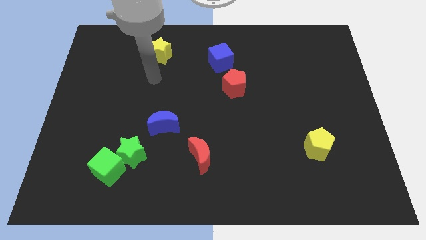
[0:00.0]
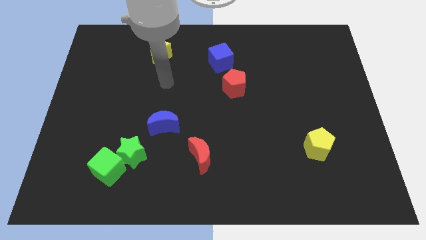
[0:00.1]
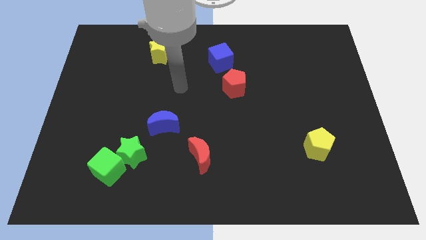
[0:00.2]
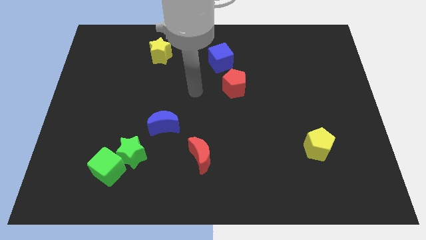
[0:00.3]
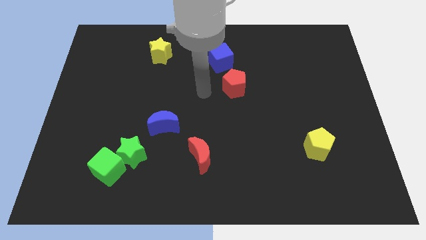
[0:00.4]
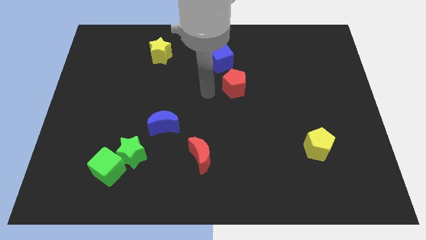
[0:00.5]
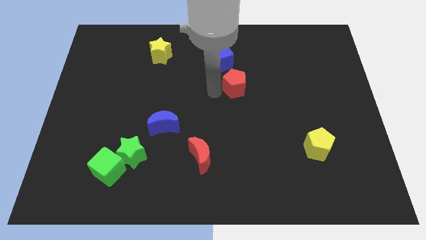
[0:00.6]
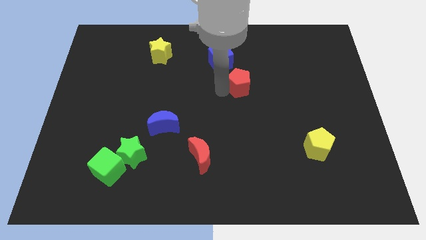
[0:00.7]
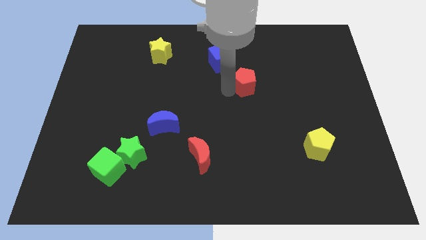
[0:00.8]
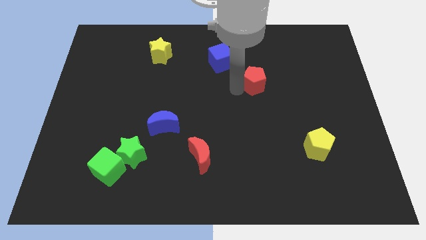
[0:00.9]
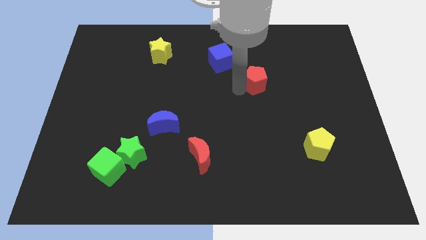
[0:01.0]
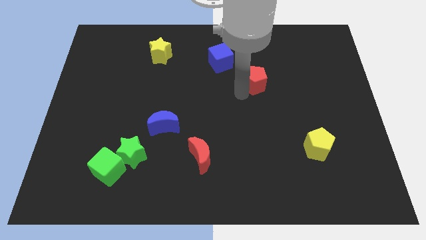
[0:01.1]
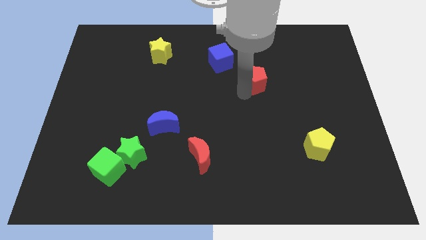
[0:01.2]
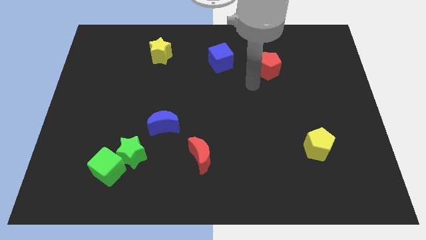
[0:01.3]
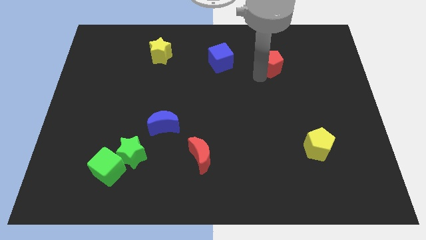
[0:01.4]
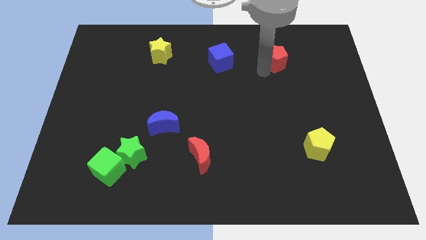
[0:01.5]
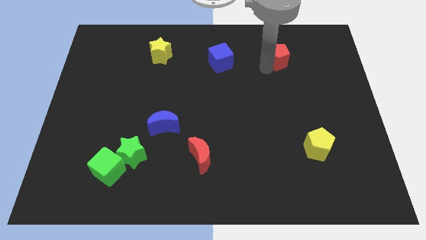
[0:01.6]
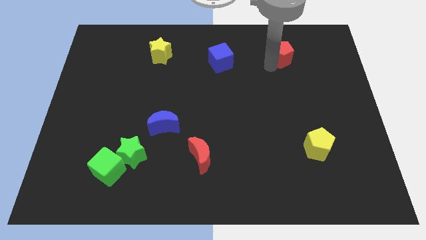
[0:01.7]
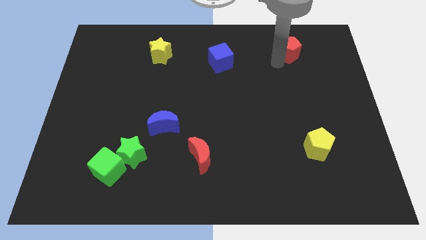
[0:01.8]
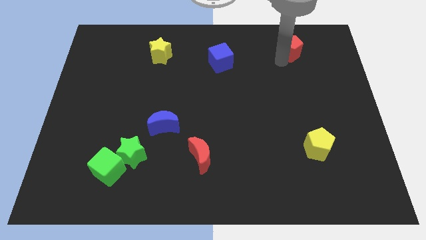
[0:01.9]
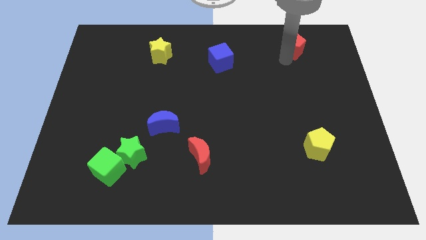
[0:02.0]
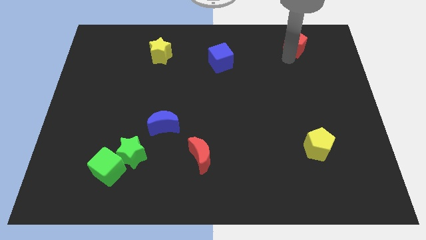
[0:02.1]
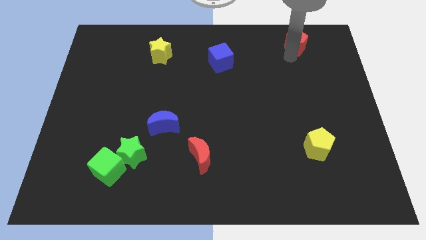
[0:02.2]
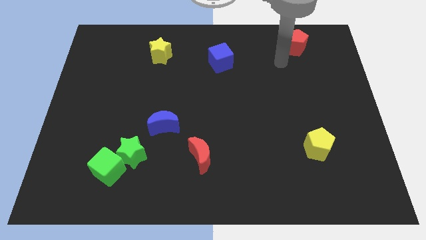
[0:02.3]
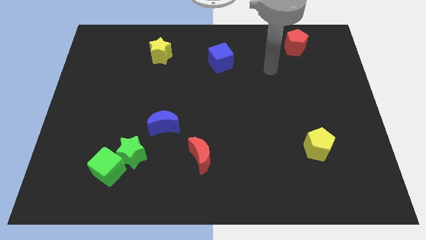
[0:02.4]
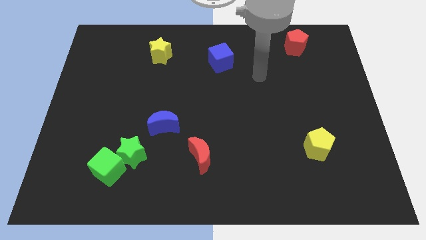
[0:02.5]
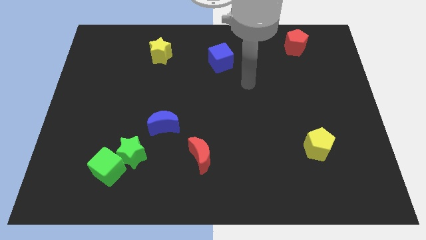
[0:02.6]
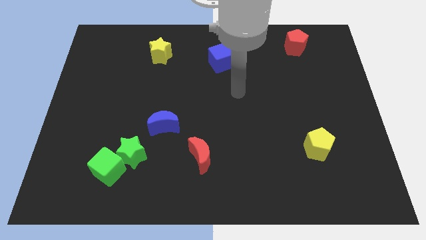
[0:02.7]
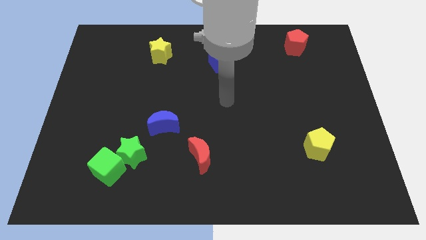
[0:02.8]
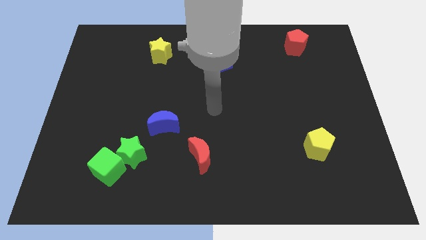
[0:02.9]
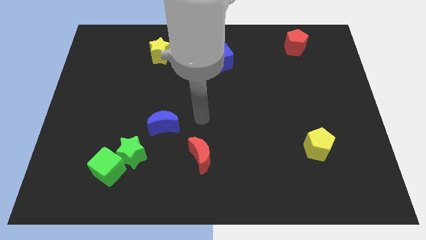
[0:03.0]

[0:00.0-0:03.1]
drag the red pentagon towards the top right side of the board

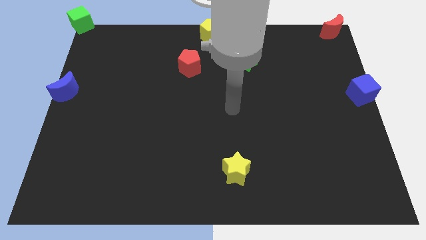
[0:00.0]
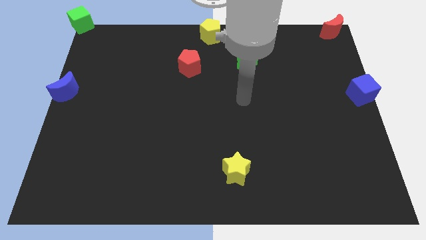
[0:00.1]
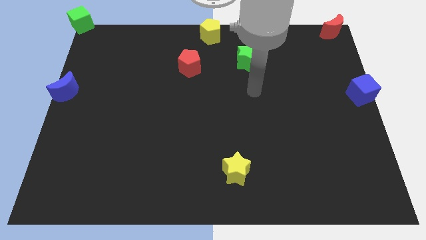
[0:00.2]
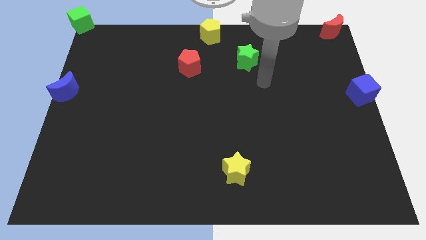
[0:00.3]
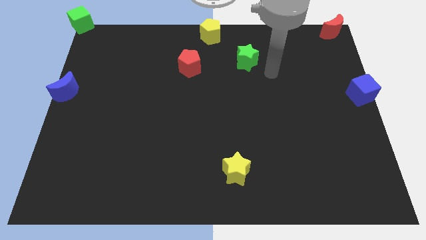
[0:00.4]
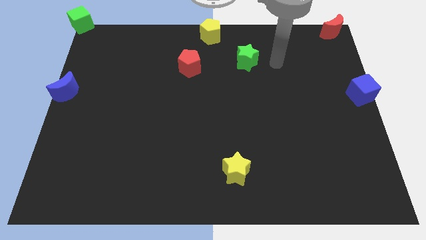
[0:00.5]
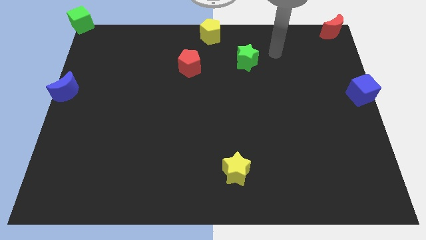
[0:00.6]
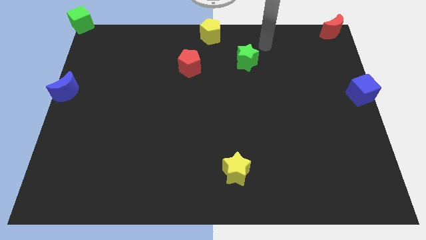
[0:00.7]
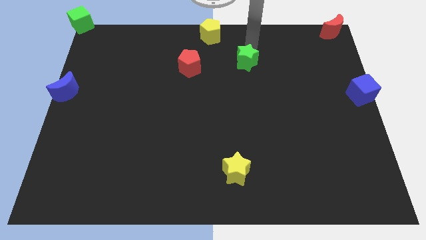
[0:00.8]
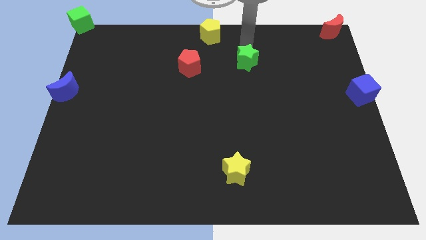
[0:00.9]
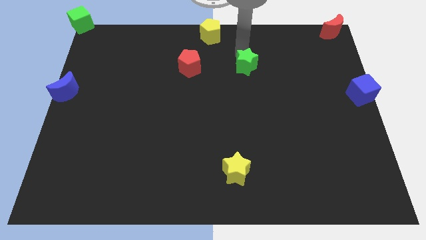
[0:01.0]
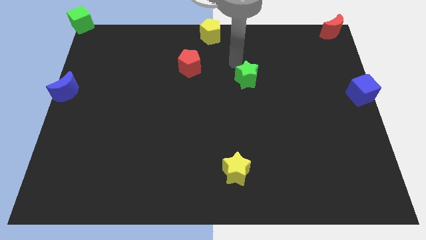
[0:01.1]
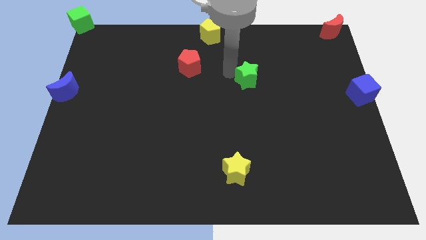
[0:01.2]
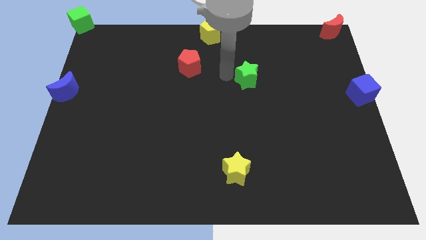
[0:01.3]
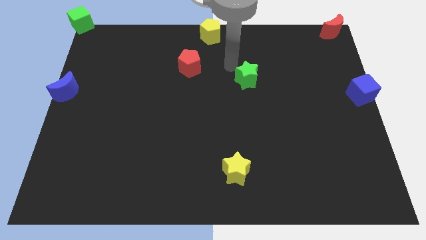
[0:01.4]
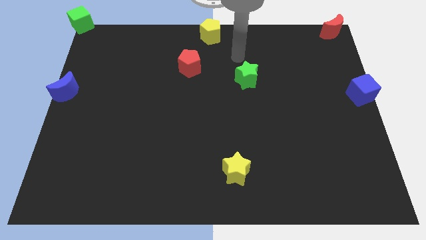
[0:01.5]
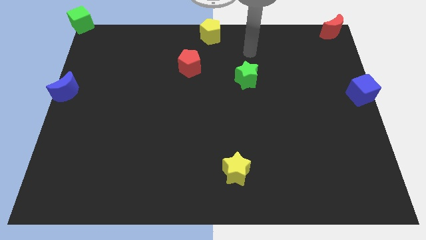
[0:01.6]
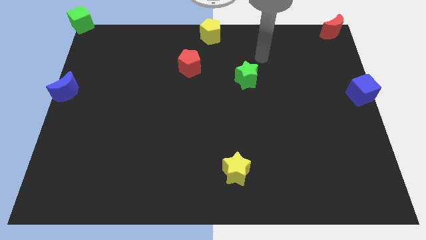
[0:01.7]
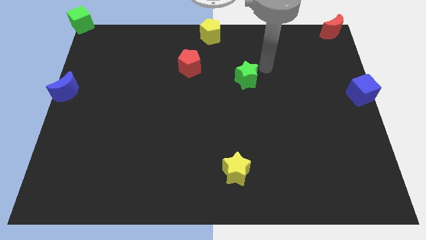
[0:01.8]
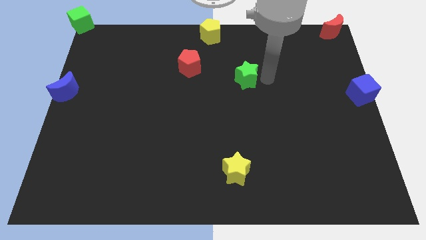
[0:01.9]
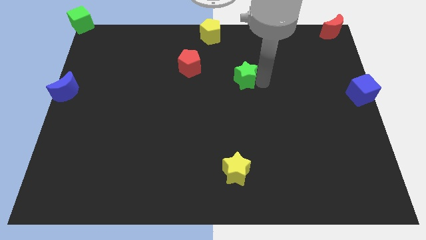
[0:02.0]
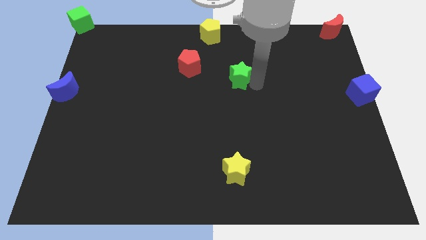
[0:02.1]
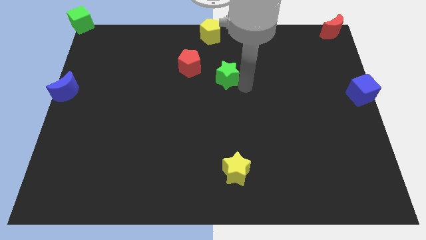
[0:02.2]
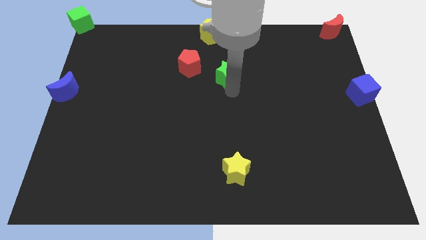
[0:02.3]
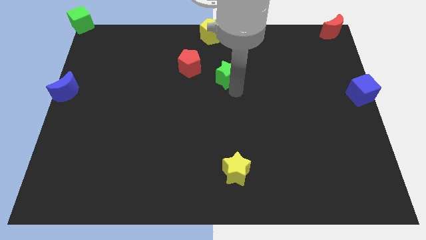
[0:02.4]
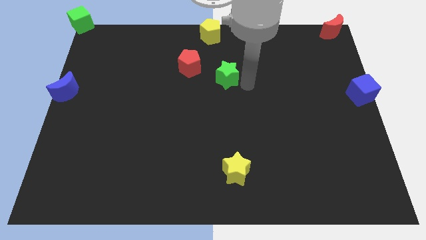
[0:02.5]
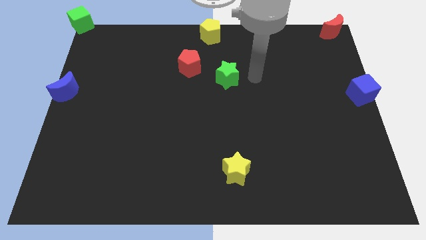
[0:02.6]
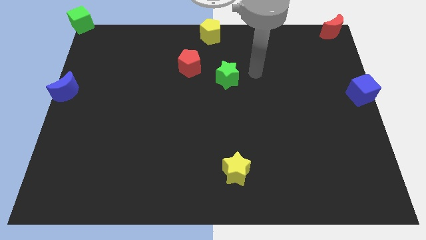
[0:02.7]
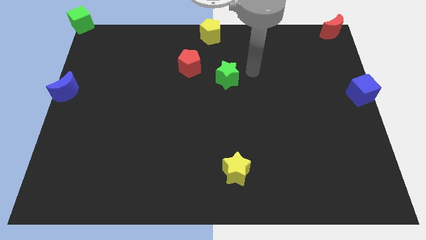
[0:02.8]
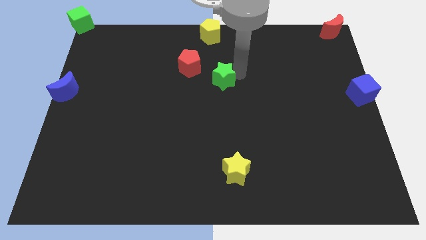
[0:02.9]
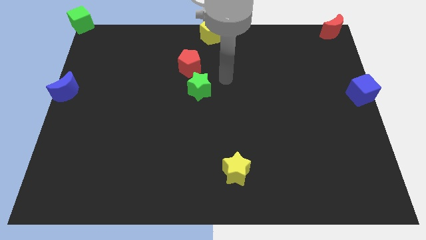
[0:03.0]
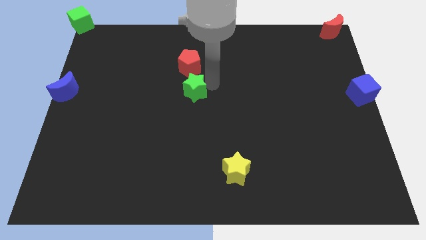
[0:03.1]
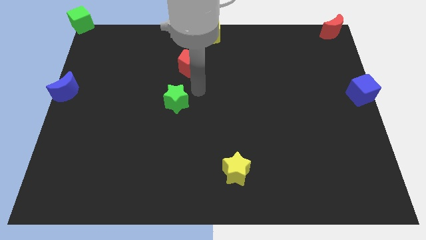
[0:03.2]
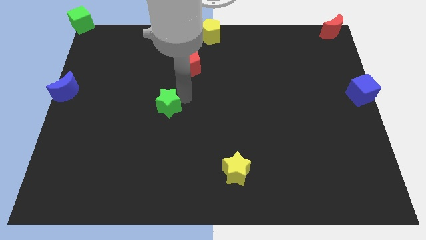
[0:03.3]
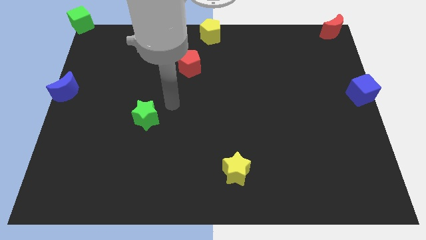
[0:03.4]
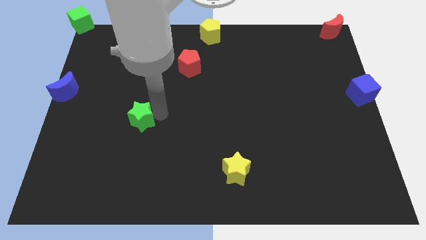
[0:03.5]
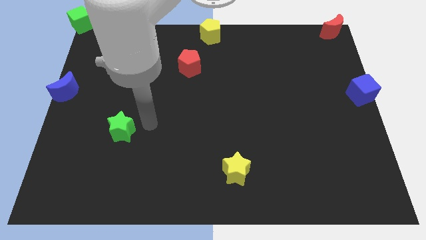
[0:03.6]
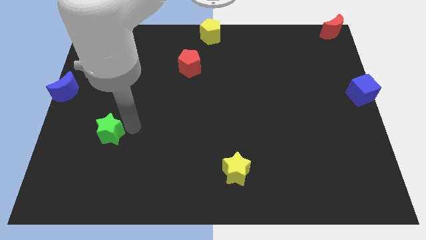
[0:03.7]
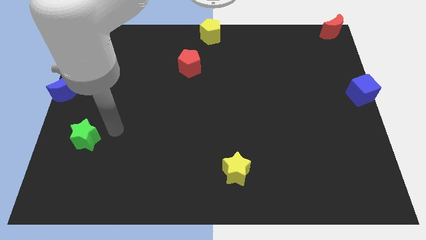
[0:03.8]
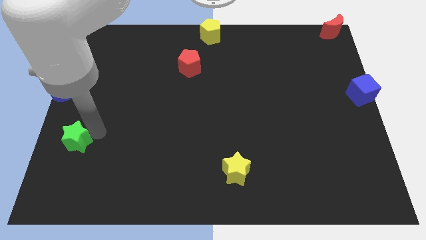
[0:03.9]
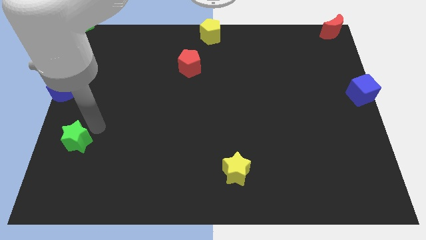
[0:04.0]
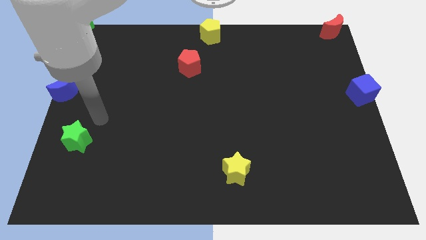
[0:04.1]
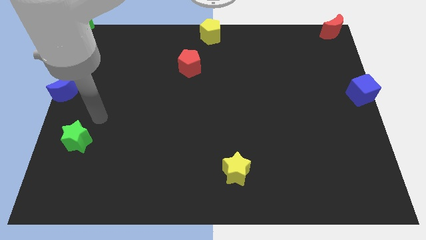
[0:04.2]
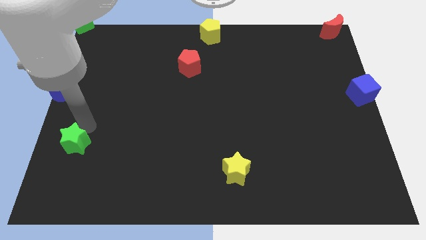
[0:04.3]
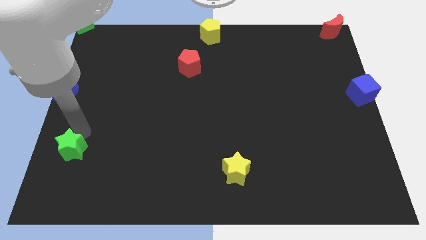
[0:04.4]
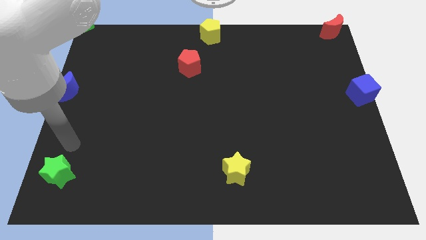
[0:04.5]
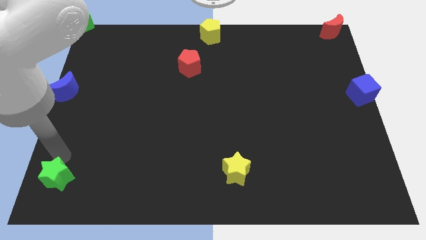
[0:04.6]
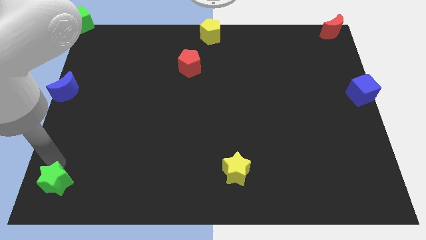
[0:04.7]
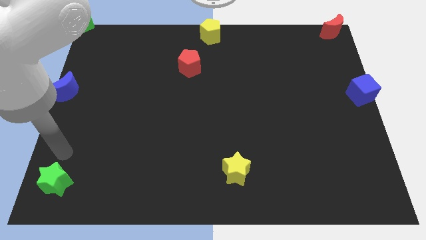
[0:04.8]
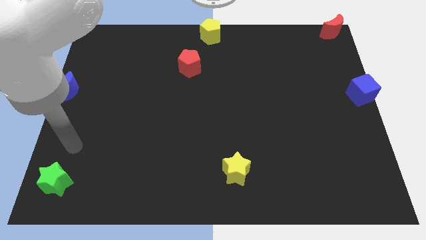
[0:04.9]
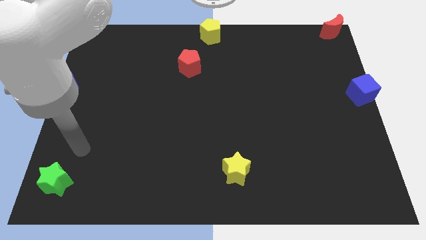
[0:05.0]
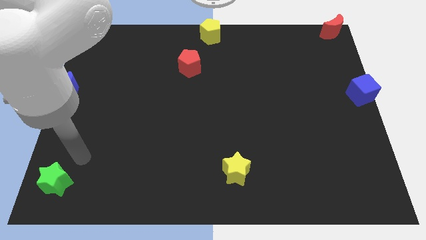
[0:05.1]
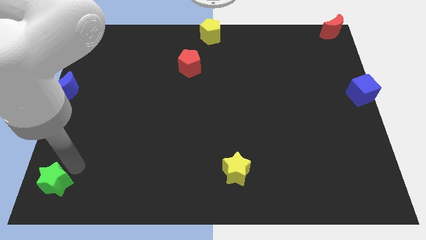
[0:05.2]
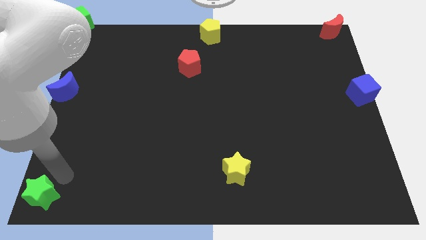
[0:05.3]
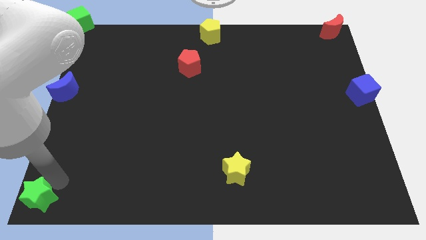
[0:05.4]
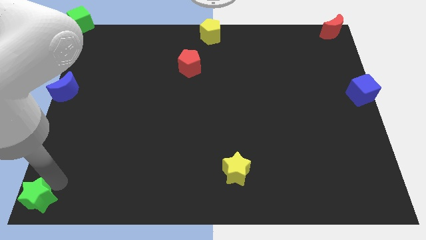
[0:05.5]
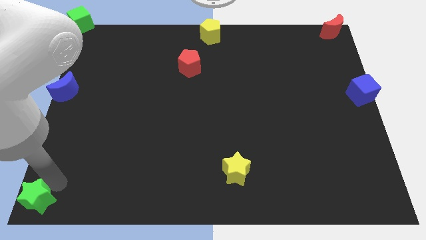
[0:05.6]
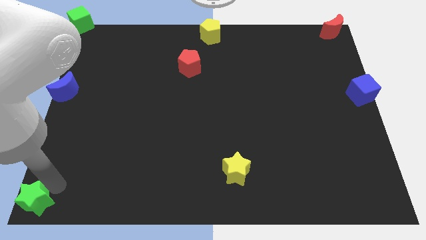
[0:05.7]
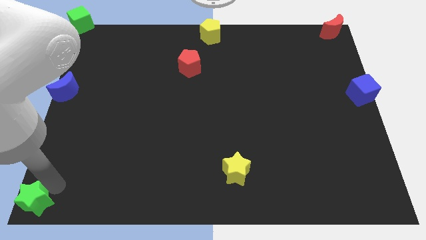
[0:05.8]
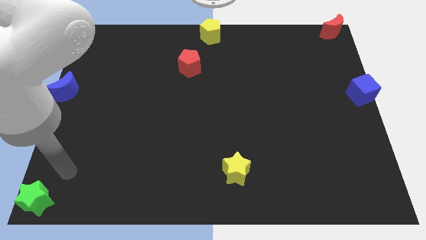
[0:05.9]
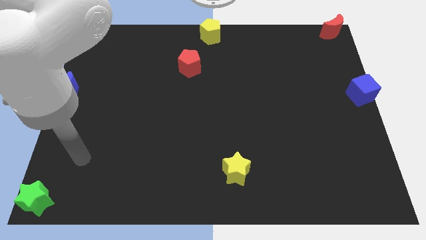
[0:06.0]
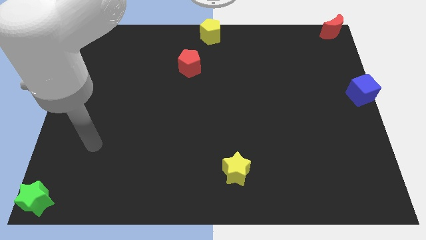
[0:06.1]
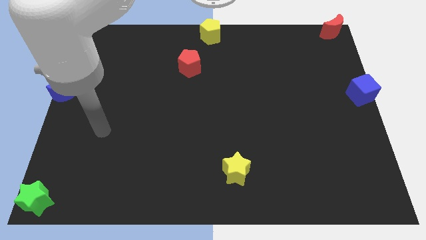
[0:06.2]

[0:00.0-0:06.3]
push the green star to the bottom left of the board
